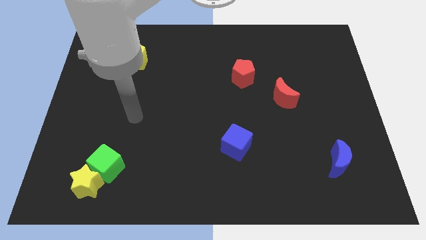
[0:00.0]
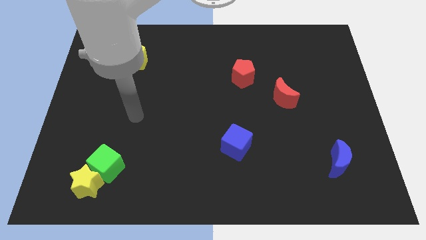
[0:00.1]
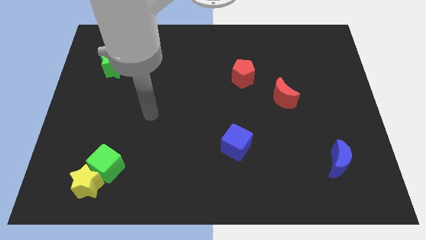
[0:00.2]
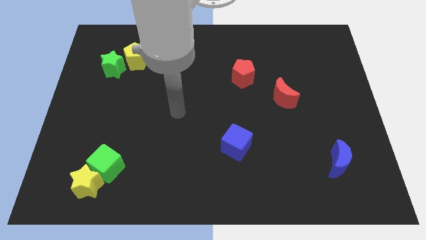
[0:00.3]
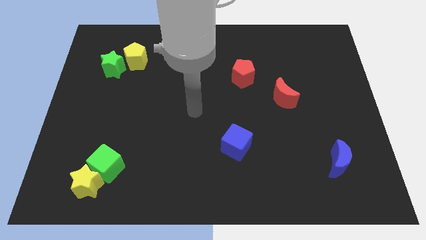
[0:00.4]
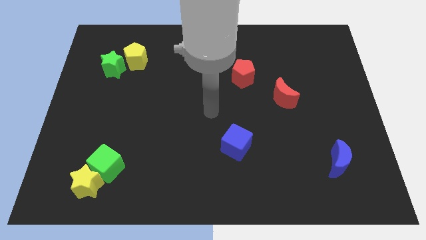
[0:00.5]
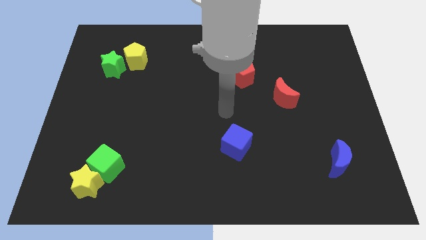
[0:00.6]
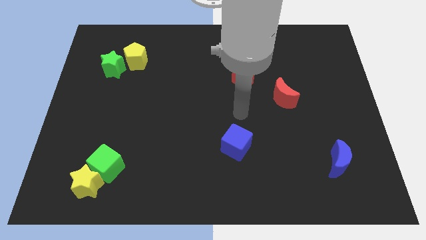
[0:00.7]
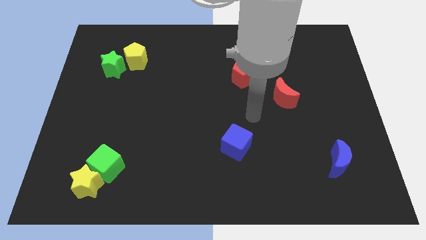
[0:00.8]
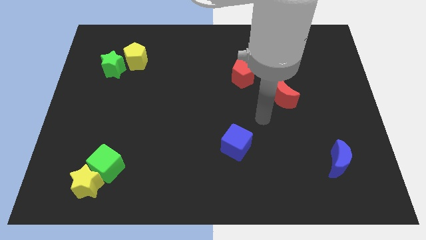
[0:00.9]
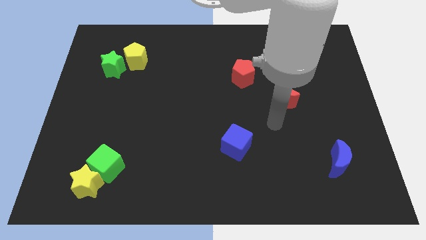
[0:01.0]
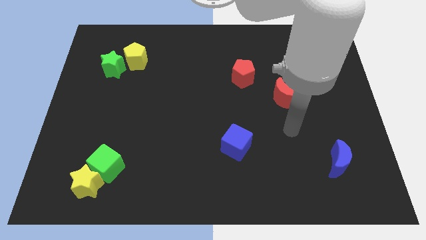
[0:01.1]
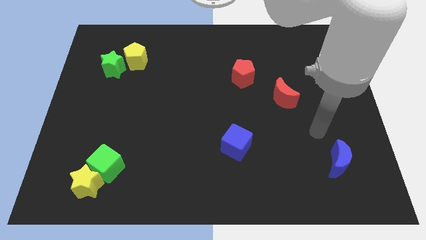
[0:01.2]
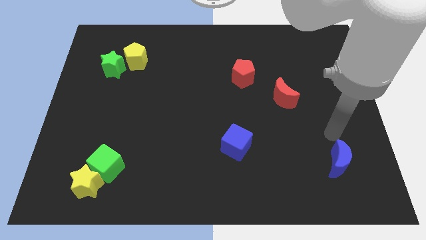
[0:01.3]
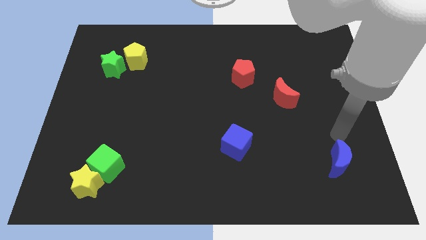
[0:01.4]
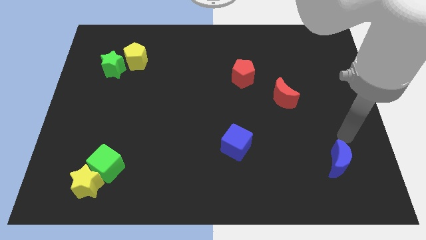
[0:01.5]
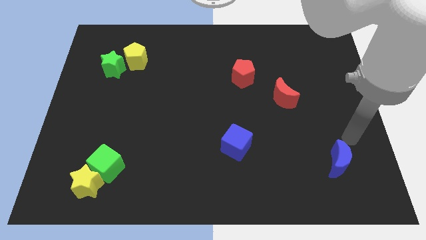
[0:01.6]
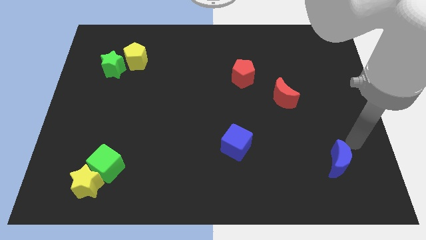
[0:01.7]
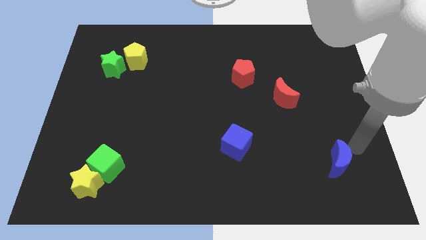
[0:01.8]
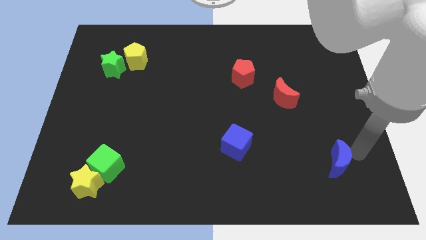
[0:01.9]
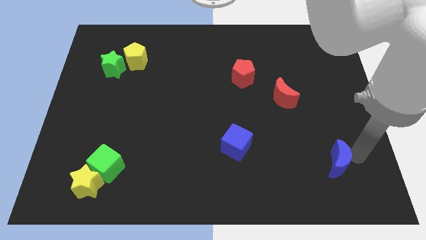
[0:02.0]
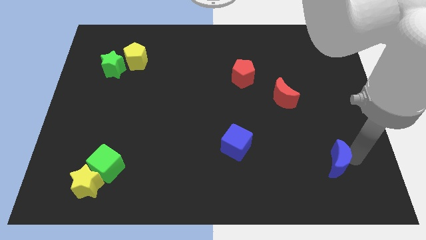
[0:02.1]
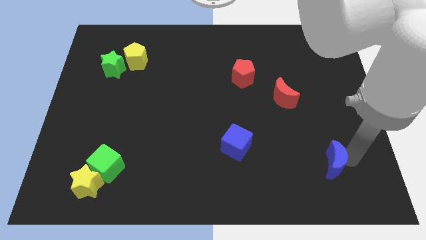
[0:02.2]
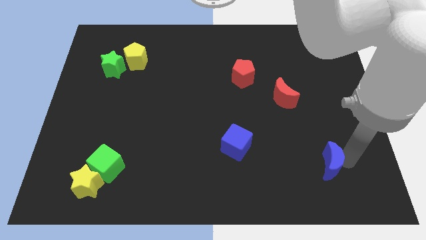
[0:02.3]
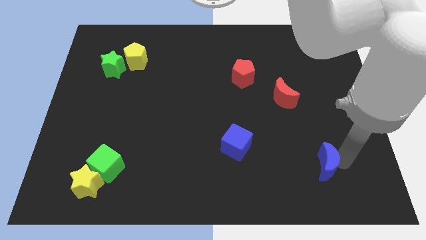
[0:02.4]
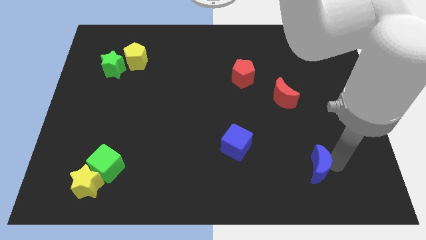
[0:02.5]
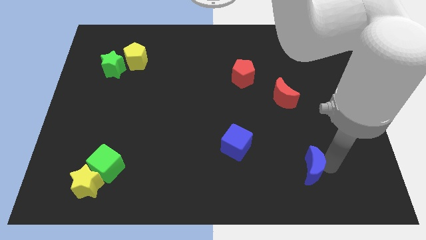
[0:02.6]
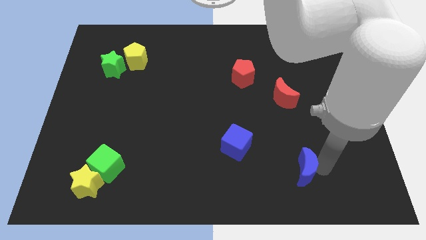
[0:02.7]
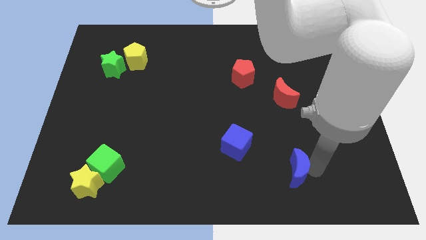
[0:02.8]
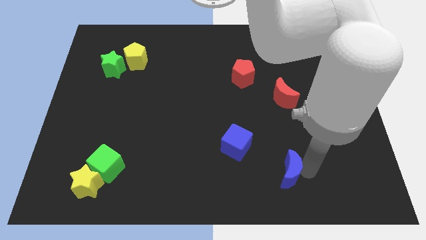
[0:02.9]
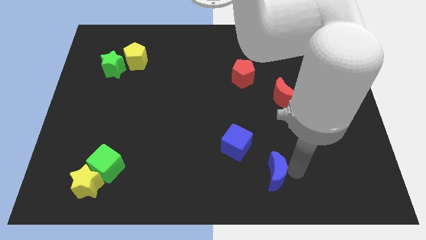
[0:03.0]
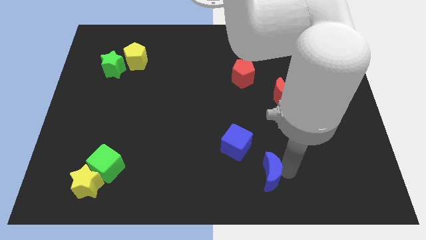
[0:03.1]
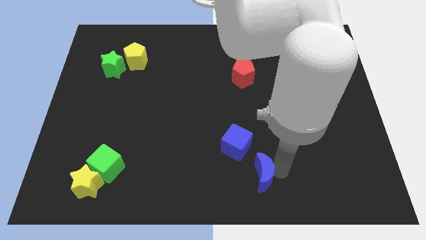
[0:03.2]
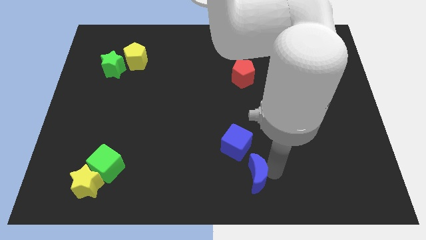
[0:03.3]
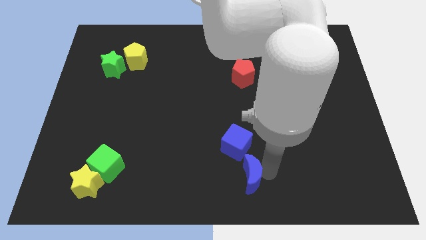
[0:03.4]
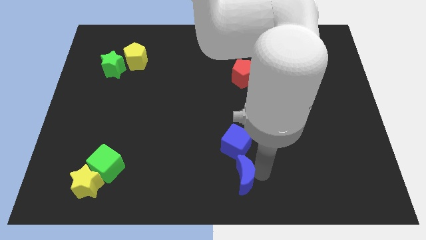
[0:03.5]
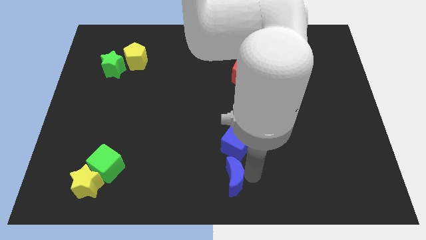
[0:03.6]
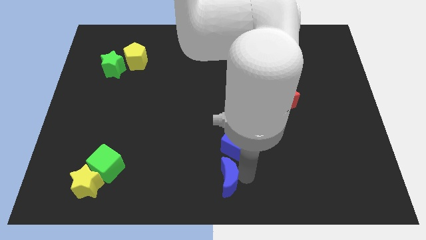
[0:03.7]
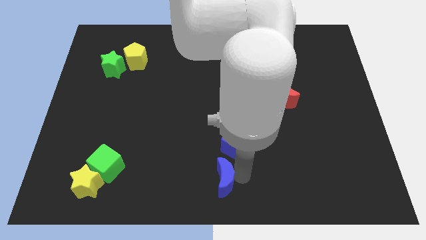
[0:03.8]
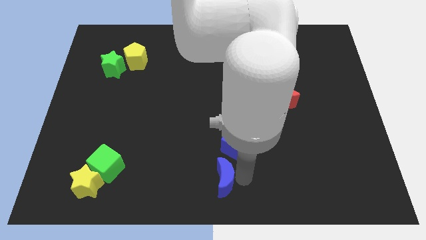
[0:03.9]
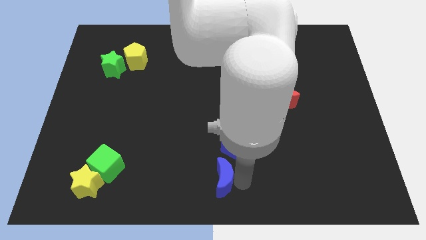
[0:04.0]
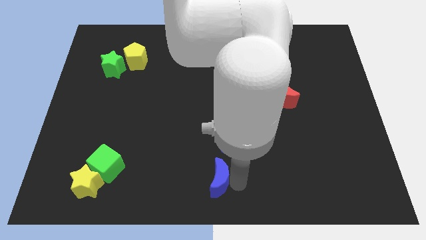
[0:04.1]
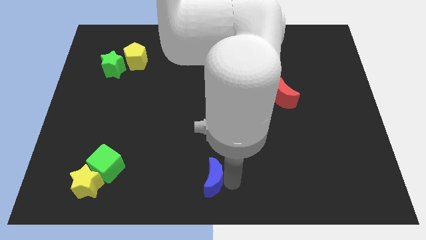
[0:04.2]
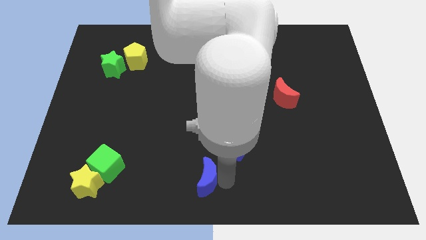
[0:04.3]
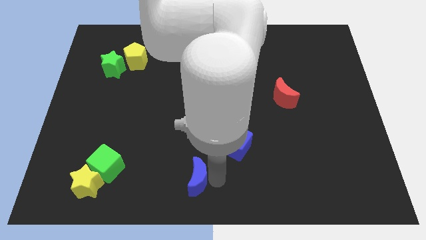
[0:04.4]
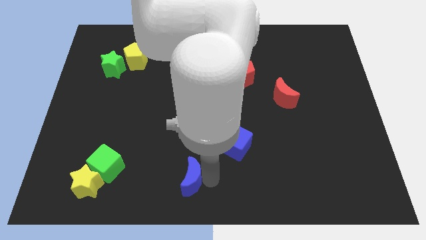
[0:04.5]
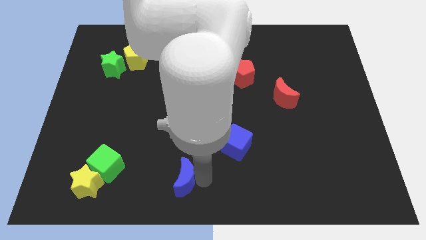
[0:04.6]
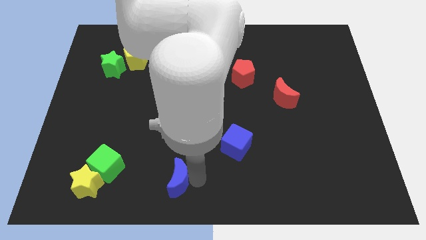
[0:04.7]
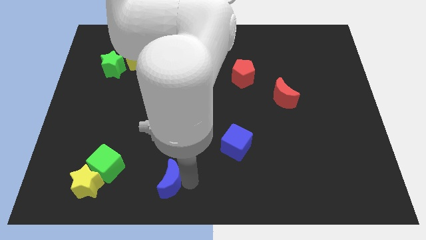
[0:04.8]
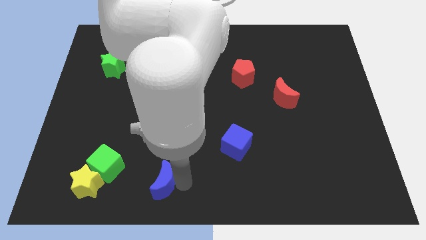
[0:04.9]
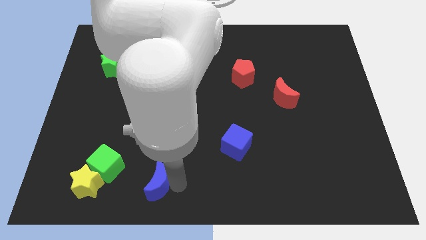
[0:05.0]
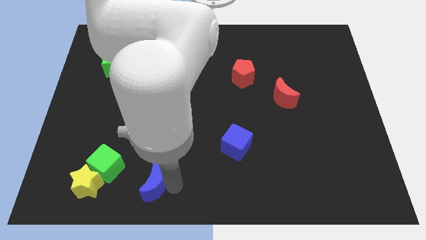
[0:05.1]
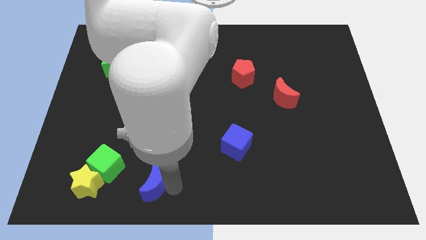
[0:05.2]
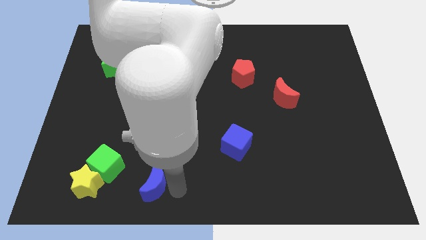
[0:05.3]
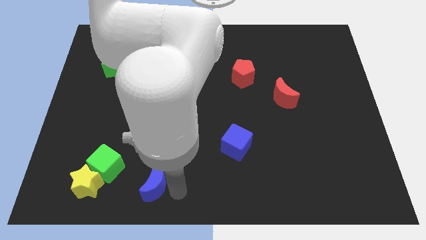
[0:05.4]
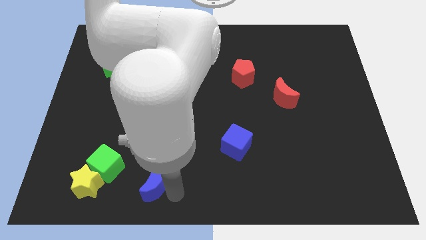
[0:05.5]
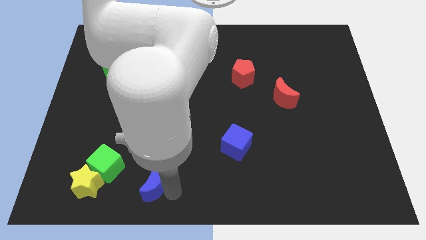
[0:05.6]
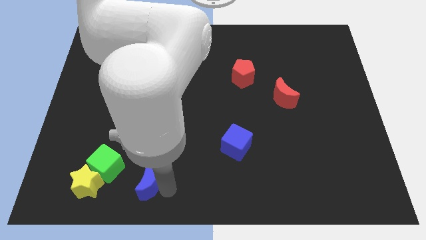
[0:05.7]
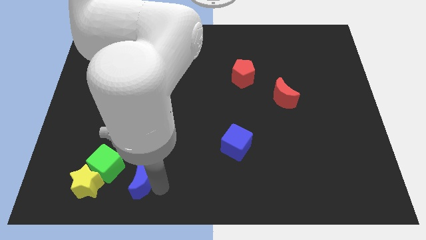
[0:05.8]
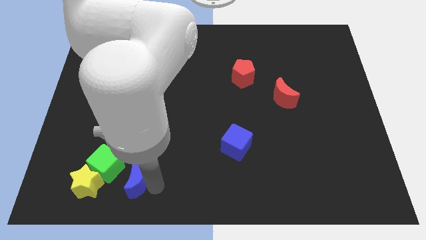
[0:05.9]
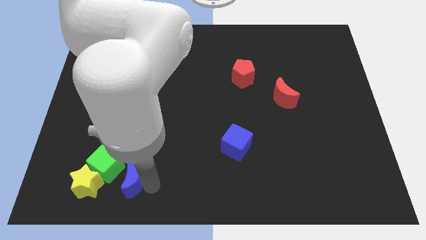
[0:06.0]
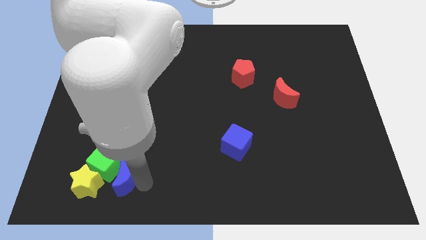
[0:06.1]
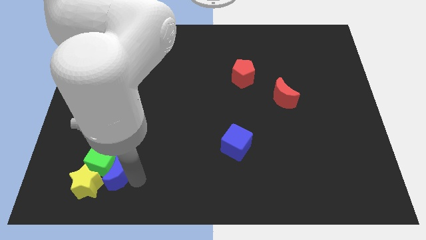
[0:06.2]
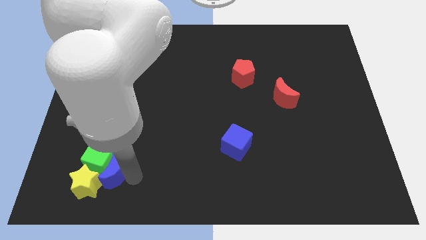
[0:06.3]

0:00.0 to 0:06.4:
put the blue moon towards the green cube

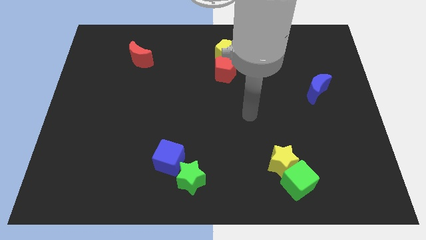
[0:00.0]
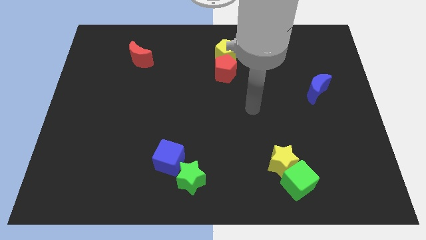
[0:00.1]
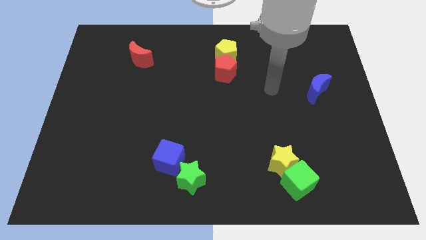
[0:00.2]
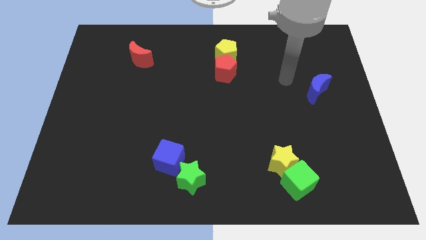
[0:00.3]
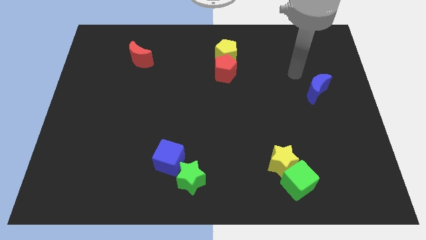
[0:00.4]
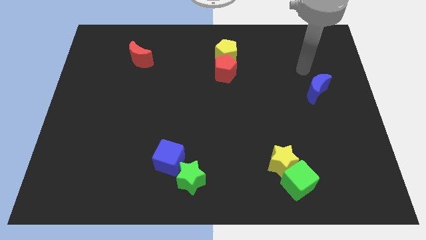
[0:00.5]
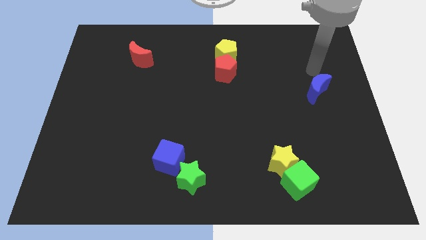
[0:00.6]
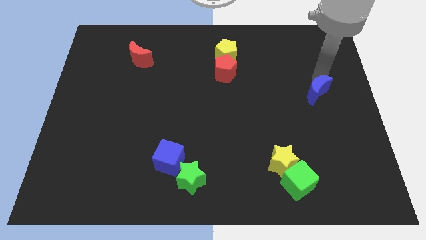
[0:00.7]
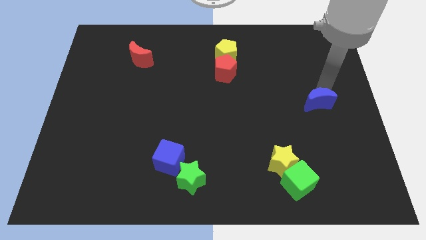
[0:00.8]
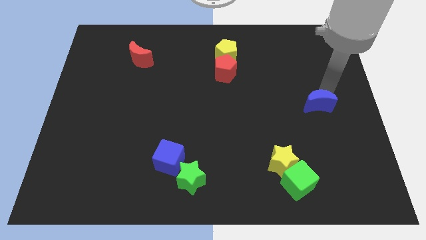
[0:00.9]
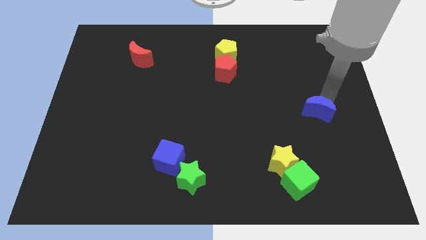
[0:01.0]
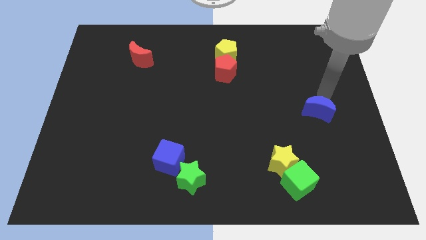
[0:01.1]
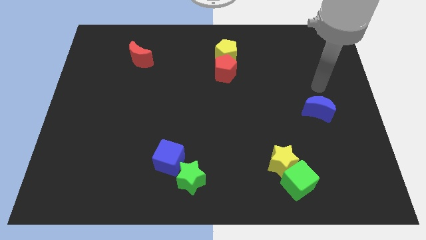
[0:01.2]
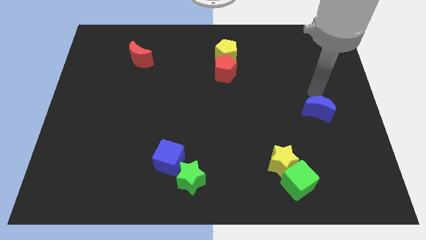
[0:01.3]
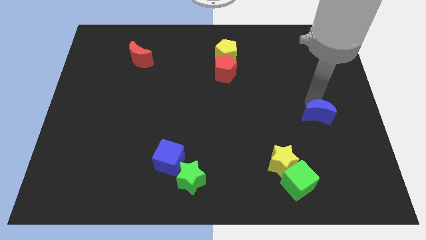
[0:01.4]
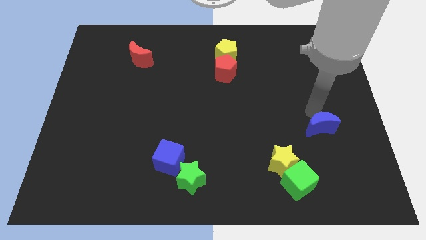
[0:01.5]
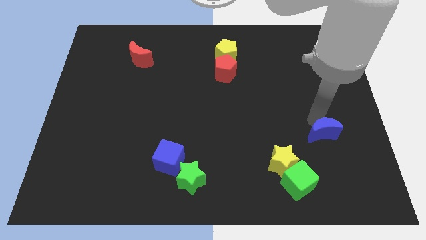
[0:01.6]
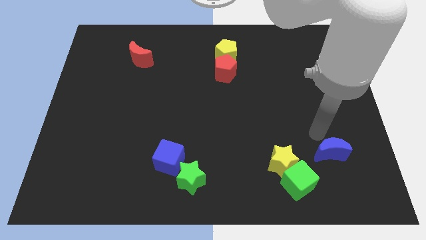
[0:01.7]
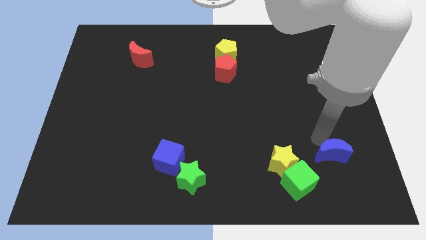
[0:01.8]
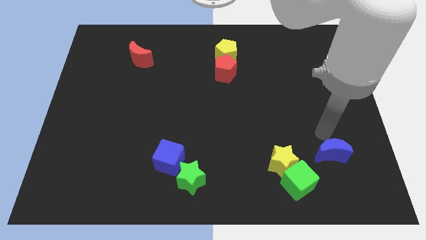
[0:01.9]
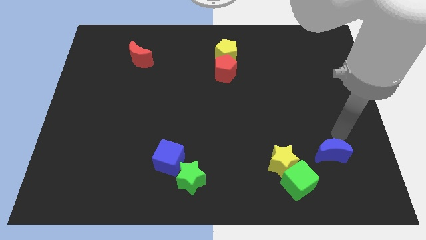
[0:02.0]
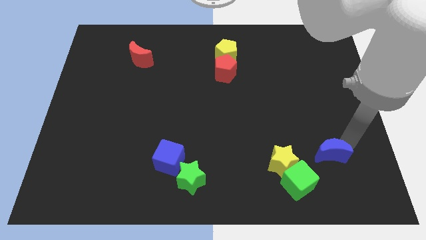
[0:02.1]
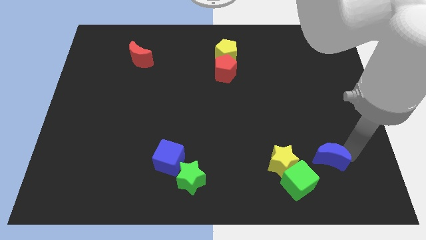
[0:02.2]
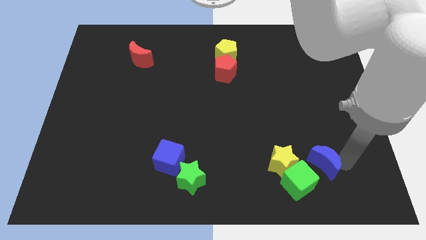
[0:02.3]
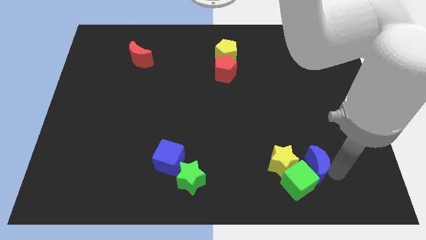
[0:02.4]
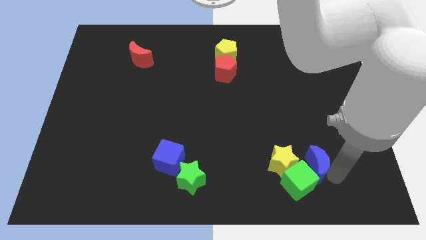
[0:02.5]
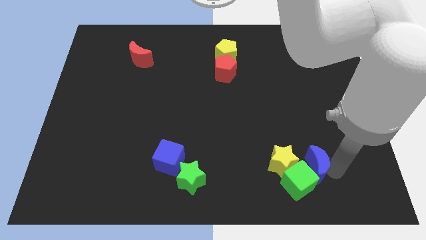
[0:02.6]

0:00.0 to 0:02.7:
push the blue moon towards the green cube
